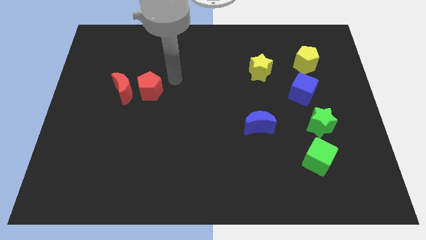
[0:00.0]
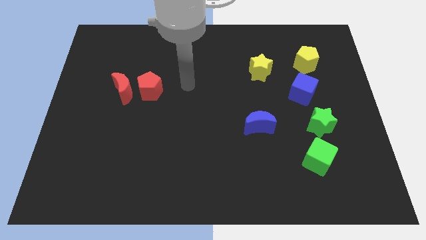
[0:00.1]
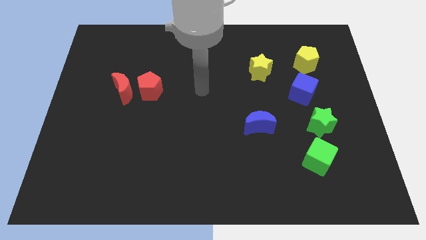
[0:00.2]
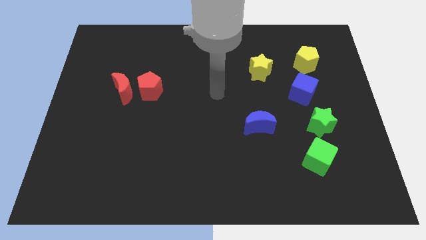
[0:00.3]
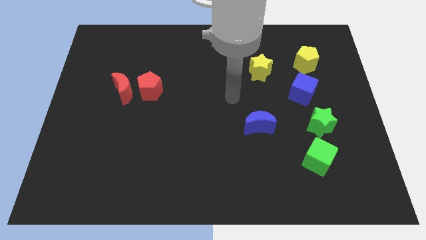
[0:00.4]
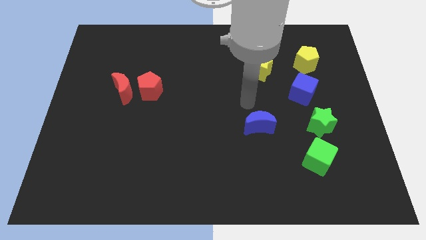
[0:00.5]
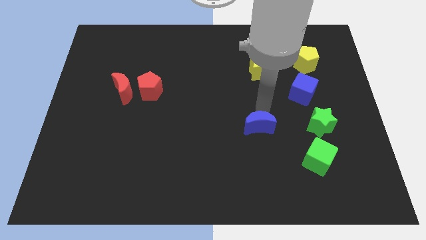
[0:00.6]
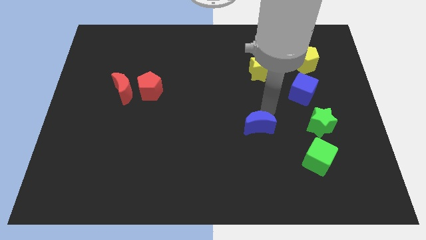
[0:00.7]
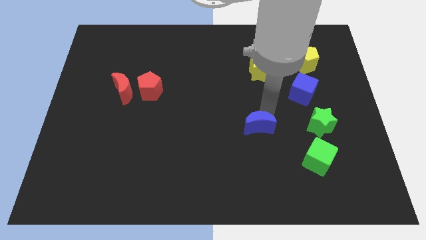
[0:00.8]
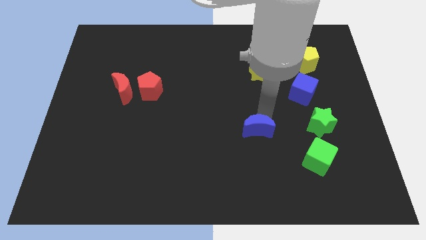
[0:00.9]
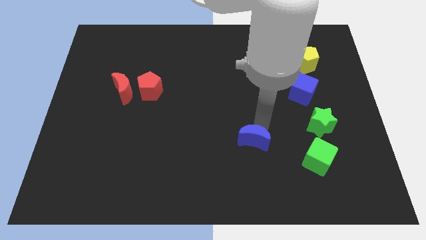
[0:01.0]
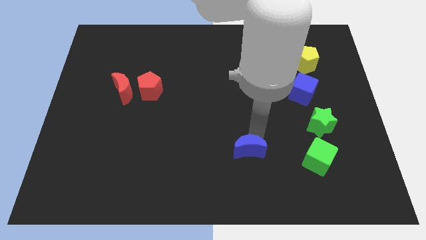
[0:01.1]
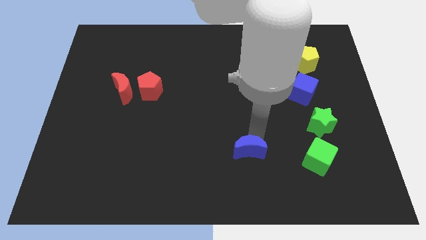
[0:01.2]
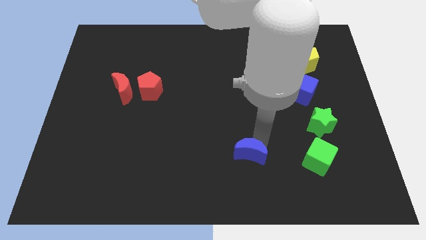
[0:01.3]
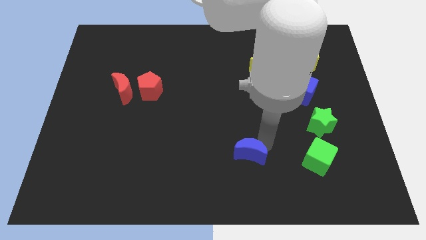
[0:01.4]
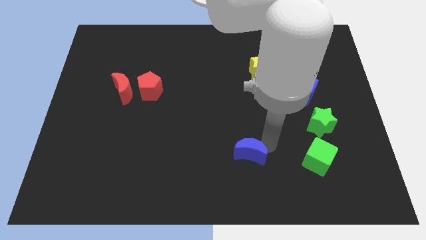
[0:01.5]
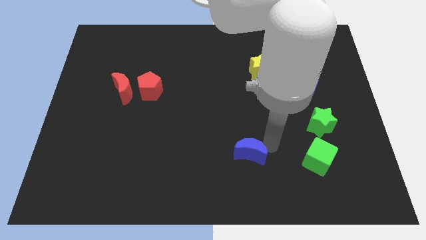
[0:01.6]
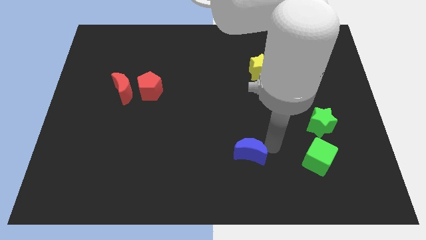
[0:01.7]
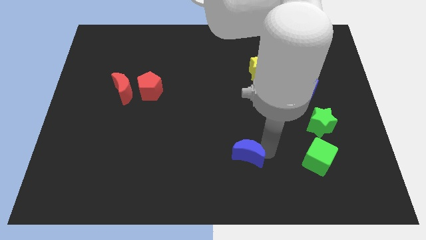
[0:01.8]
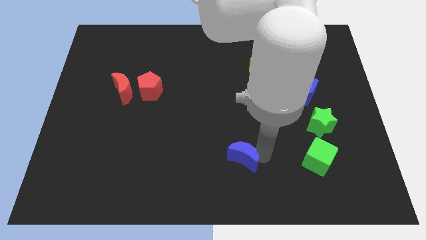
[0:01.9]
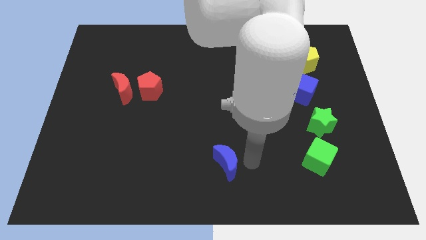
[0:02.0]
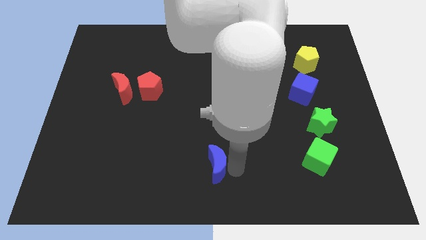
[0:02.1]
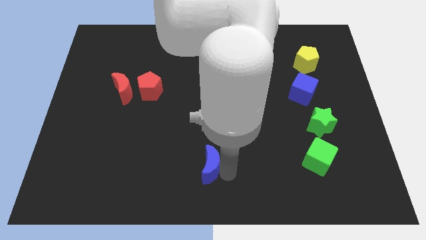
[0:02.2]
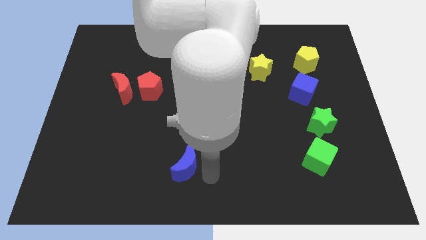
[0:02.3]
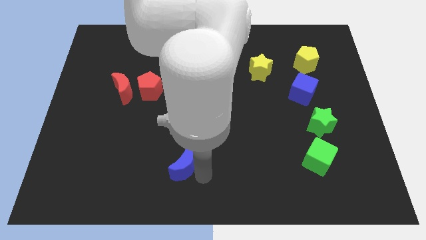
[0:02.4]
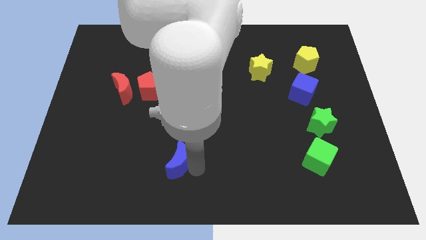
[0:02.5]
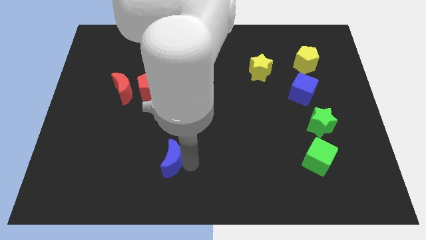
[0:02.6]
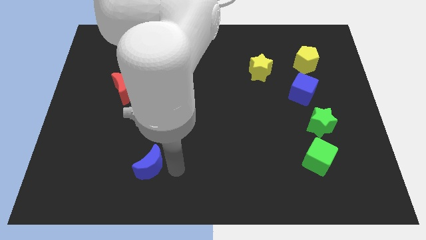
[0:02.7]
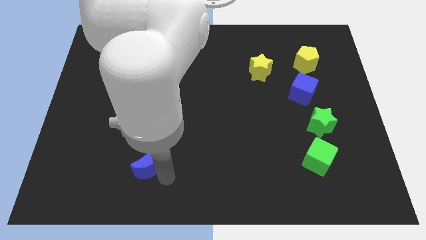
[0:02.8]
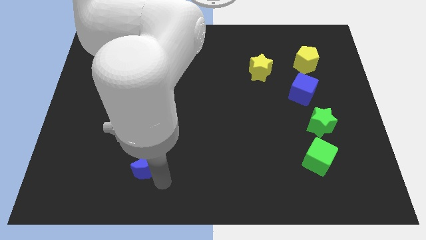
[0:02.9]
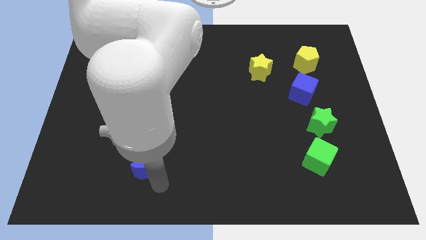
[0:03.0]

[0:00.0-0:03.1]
place blue moon below the red pentagon

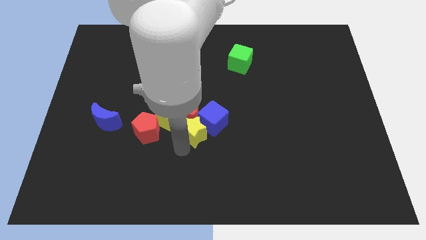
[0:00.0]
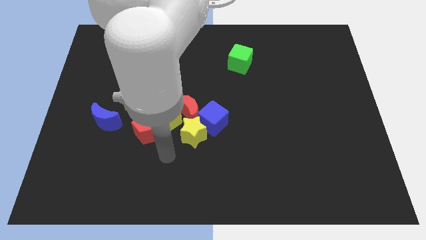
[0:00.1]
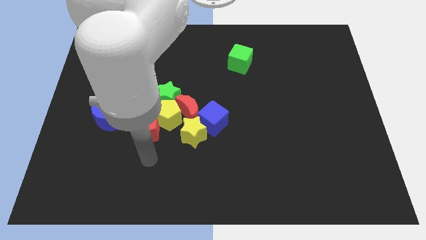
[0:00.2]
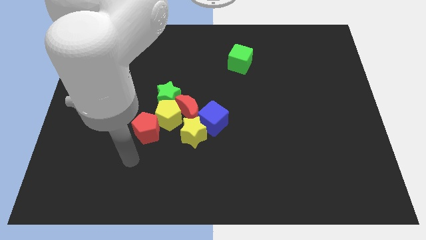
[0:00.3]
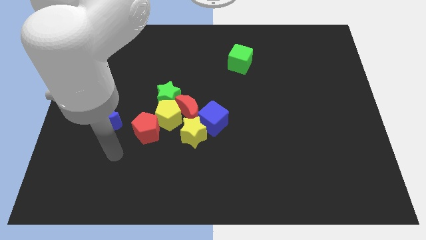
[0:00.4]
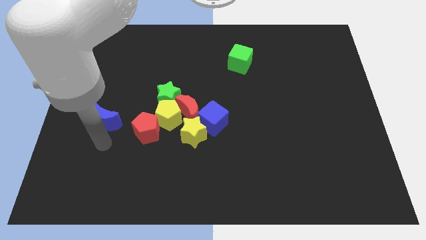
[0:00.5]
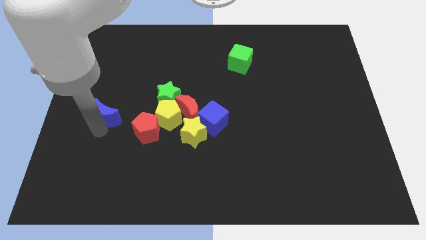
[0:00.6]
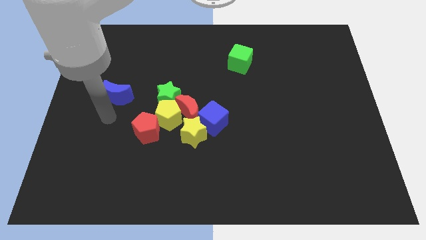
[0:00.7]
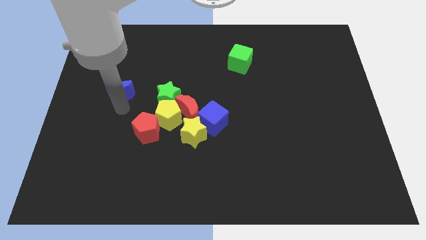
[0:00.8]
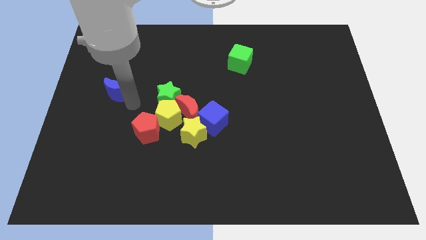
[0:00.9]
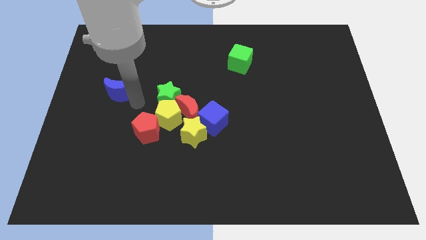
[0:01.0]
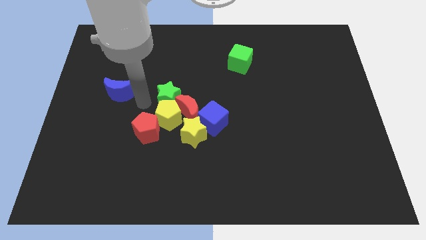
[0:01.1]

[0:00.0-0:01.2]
place the blue crescent to the left of the green star

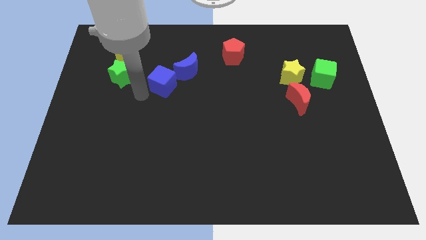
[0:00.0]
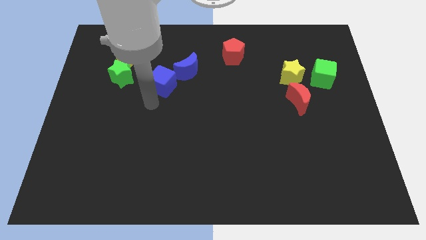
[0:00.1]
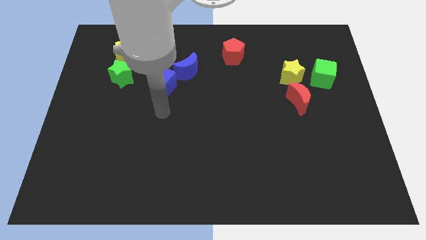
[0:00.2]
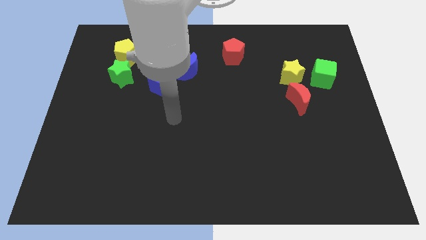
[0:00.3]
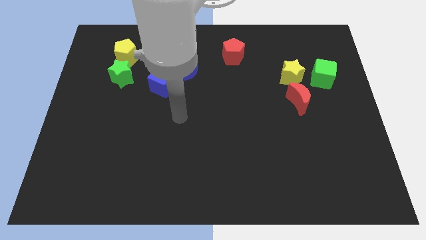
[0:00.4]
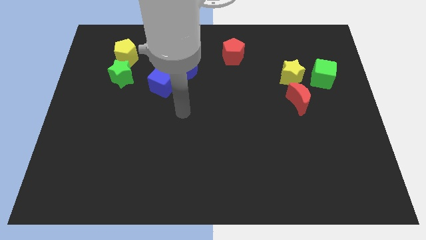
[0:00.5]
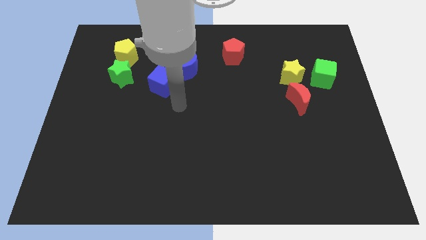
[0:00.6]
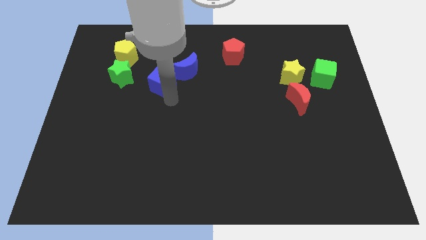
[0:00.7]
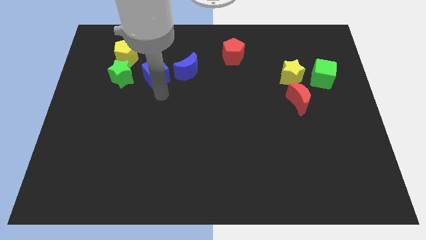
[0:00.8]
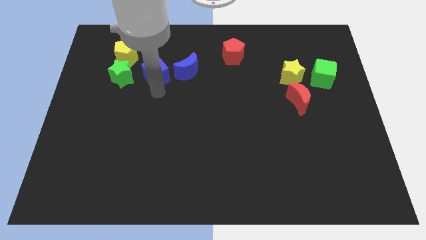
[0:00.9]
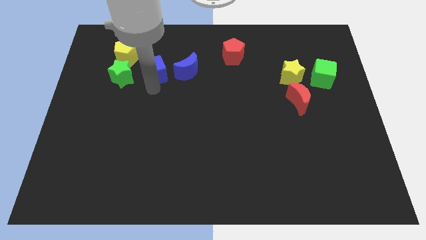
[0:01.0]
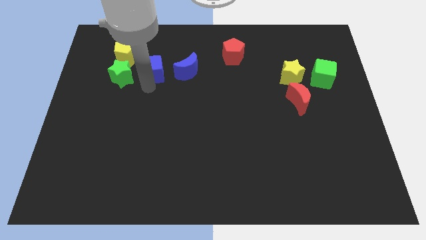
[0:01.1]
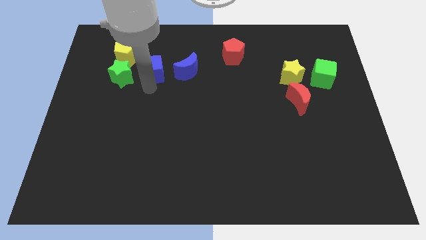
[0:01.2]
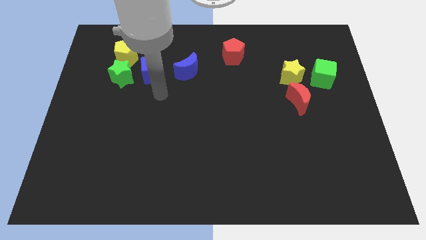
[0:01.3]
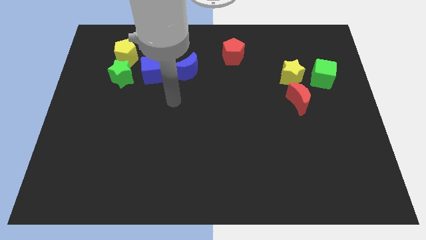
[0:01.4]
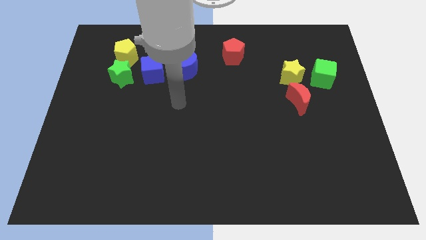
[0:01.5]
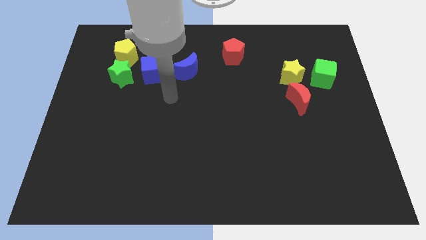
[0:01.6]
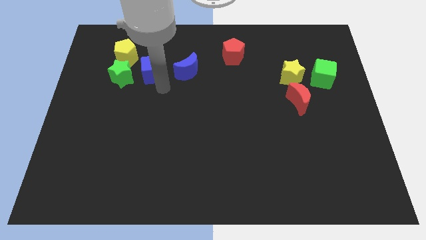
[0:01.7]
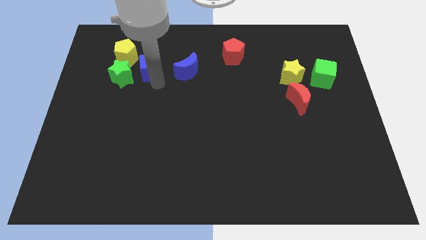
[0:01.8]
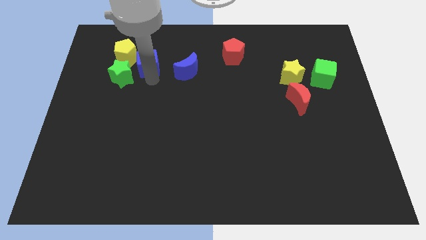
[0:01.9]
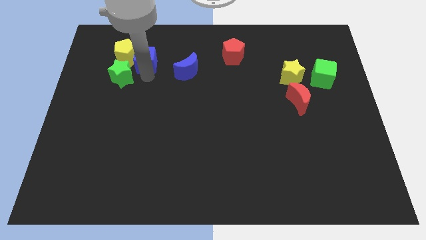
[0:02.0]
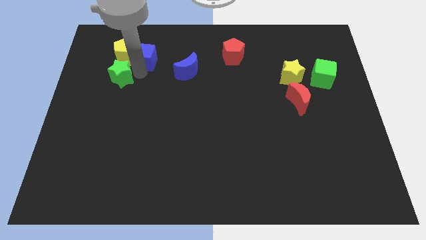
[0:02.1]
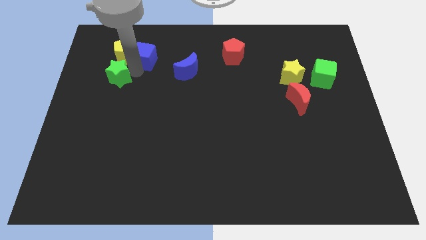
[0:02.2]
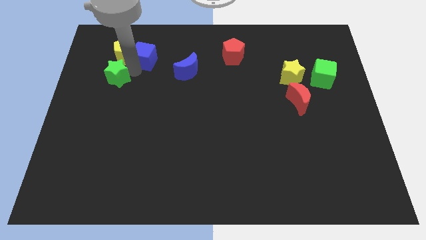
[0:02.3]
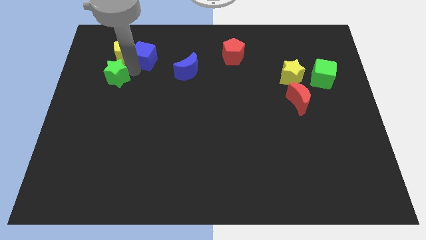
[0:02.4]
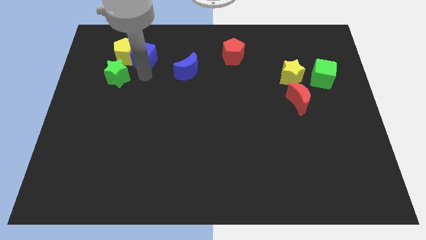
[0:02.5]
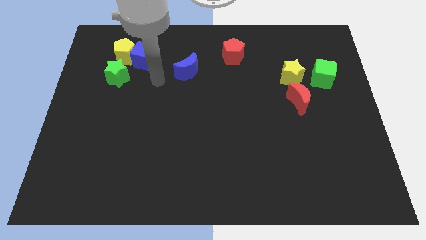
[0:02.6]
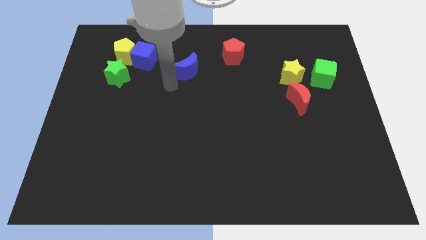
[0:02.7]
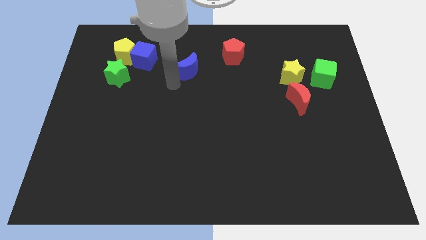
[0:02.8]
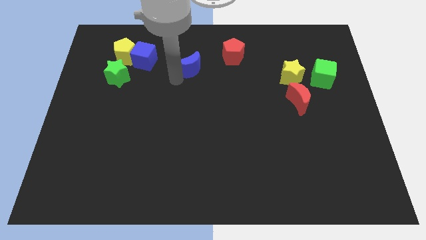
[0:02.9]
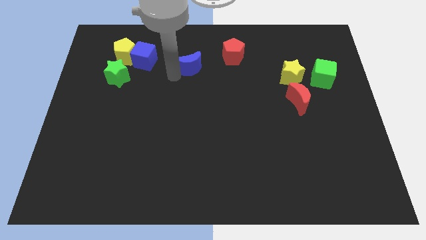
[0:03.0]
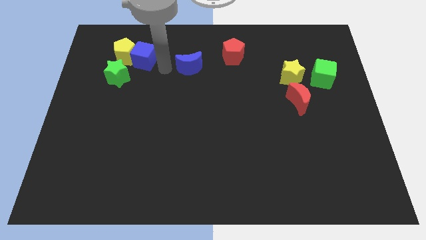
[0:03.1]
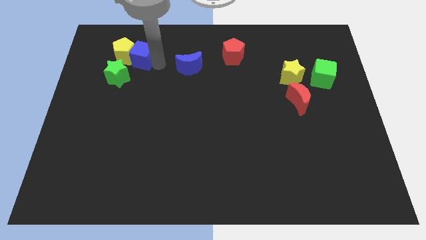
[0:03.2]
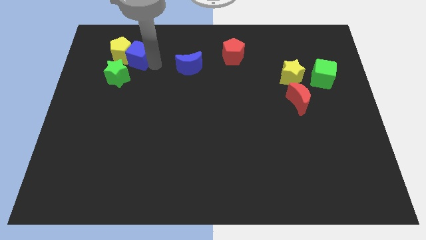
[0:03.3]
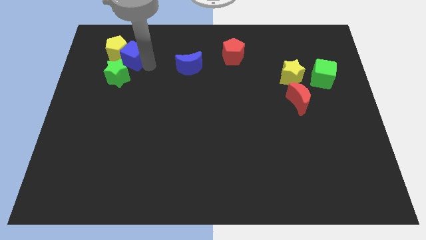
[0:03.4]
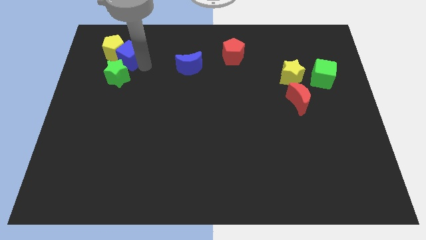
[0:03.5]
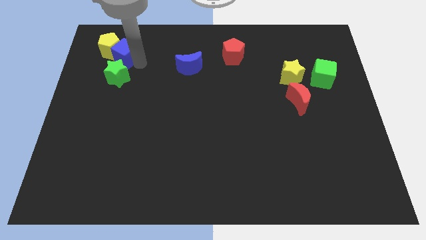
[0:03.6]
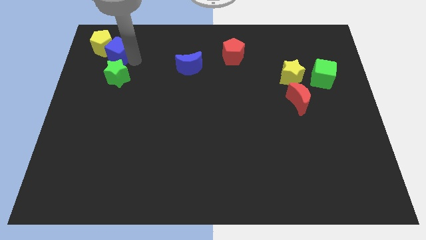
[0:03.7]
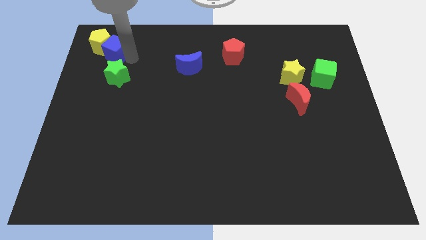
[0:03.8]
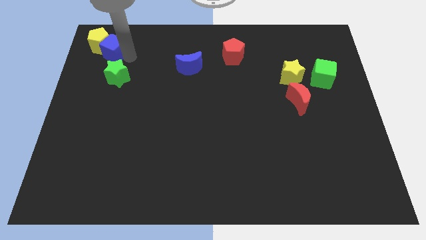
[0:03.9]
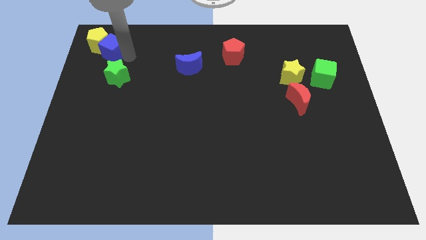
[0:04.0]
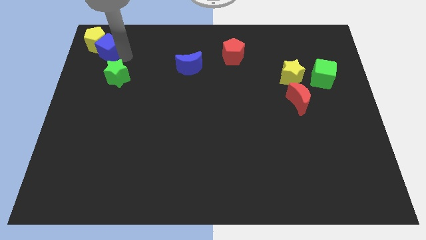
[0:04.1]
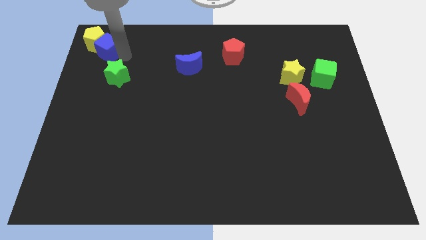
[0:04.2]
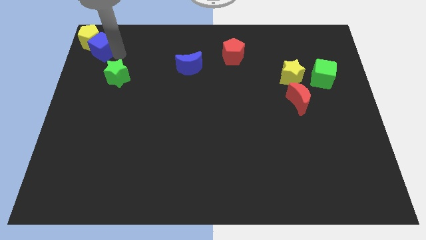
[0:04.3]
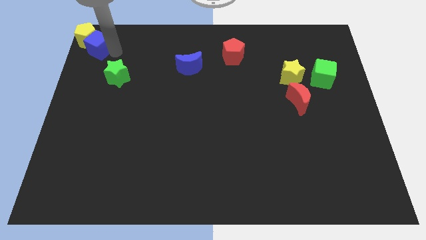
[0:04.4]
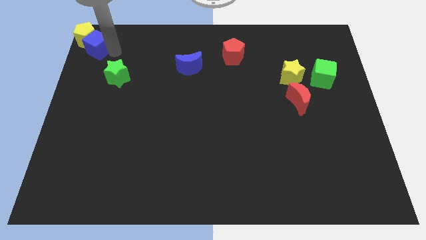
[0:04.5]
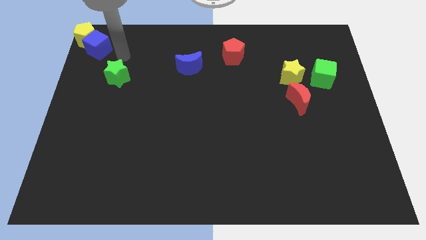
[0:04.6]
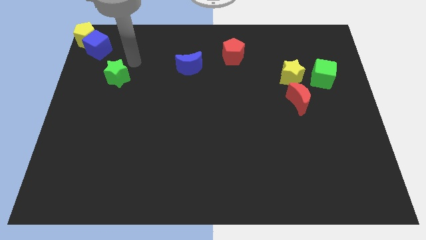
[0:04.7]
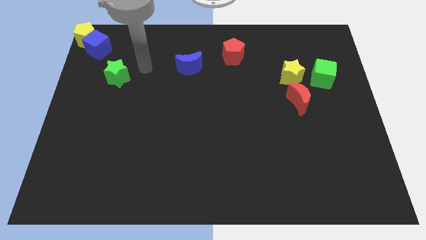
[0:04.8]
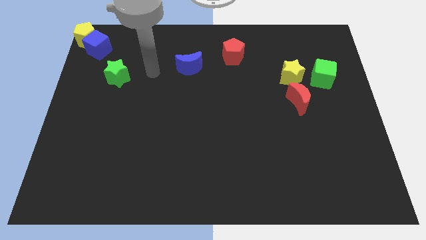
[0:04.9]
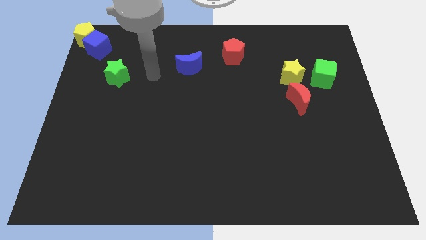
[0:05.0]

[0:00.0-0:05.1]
push the blue cube and yellow pentagon to the top left corner of the board
